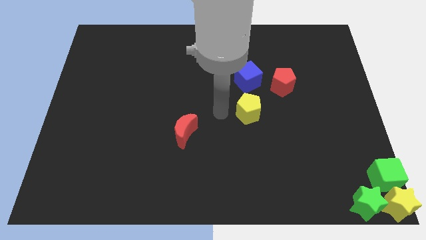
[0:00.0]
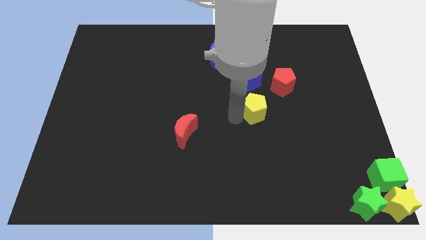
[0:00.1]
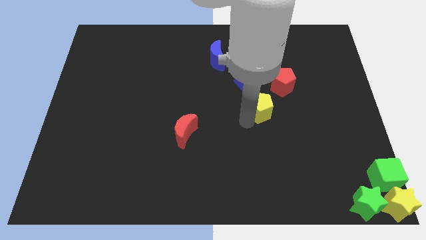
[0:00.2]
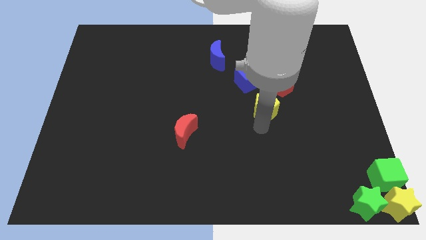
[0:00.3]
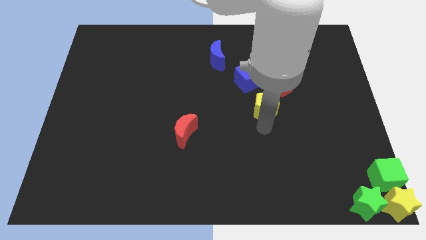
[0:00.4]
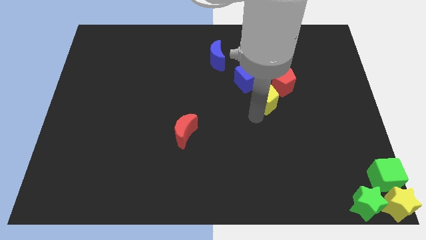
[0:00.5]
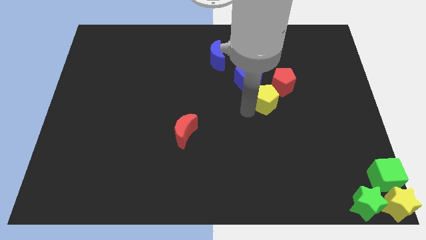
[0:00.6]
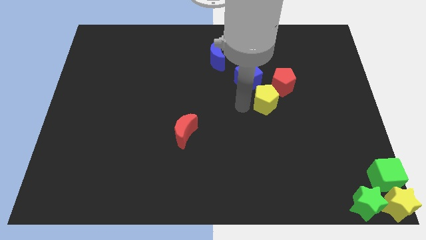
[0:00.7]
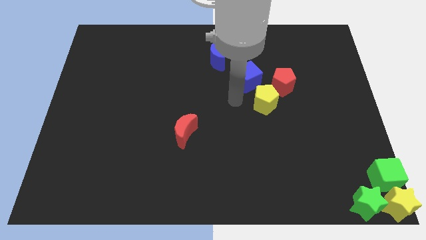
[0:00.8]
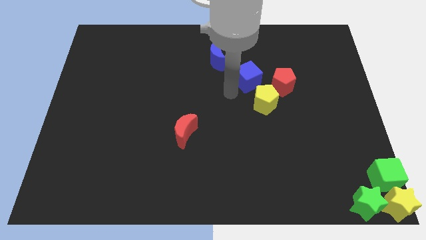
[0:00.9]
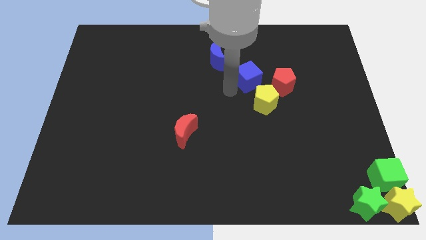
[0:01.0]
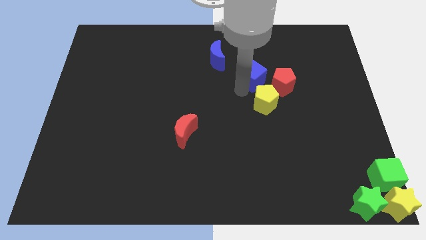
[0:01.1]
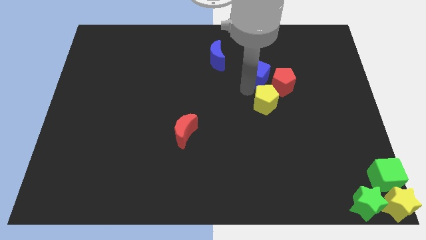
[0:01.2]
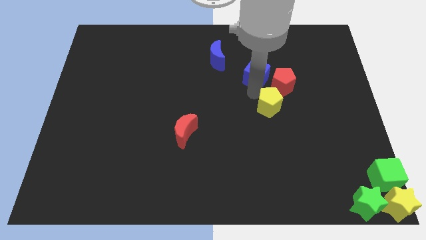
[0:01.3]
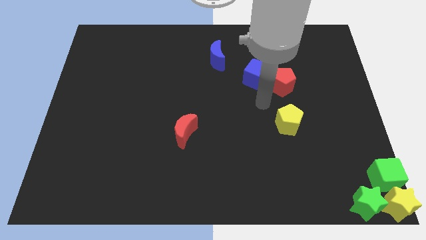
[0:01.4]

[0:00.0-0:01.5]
place the yellow pentagon below the red pentagon

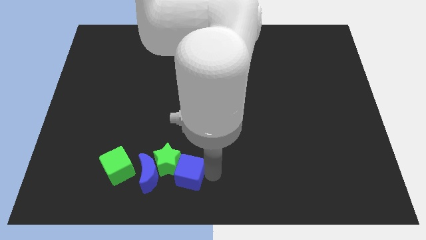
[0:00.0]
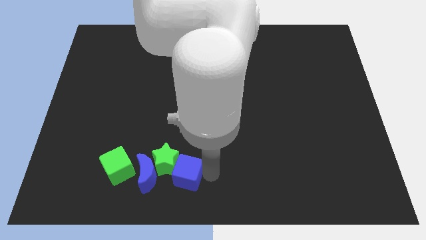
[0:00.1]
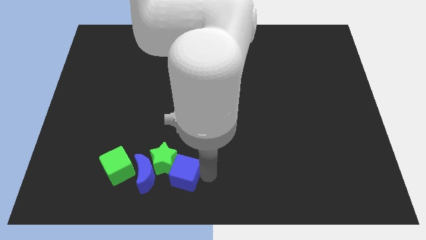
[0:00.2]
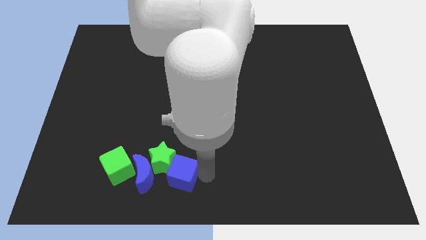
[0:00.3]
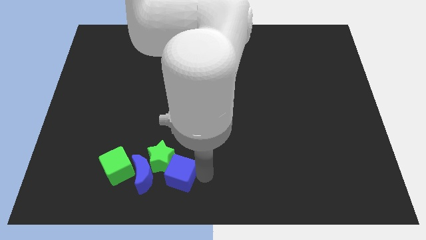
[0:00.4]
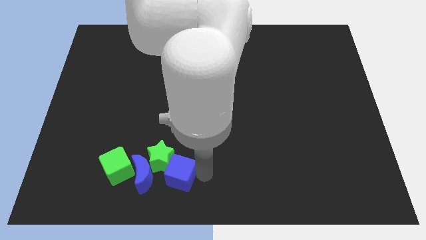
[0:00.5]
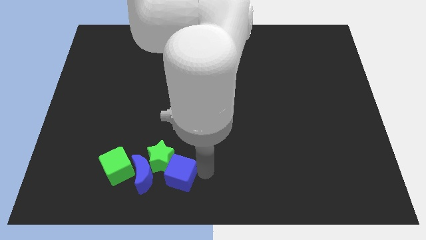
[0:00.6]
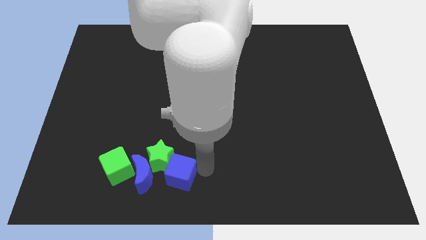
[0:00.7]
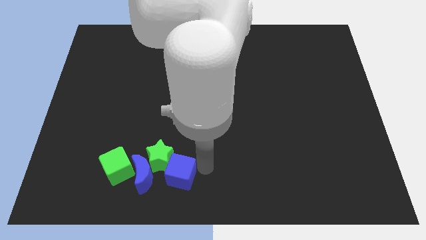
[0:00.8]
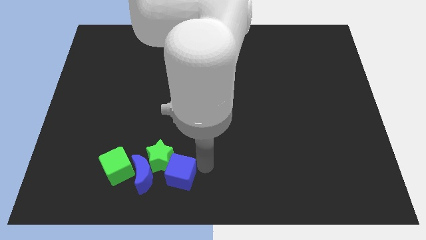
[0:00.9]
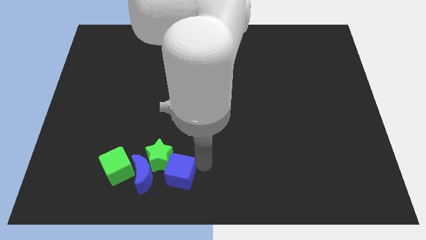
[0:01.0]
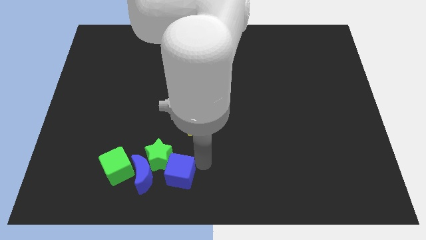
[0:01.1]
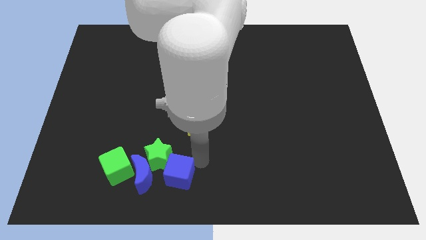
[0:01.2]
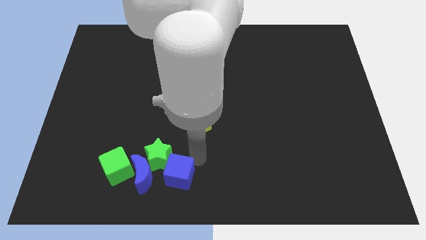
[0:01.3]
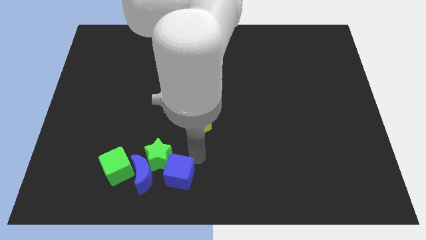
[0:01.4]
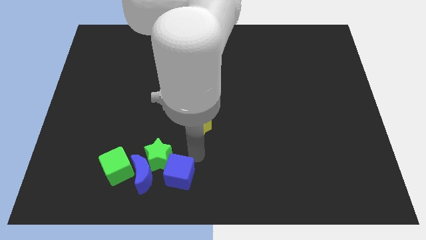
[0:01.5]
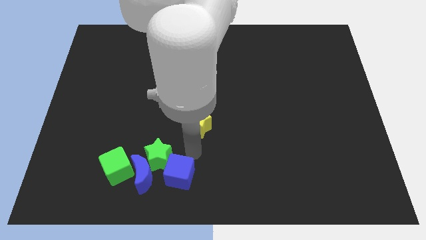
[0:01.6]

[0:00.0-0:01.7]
push the blue cube slightly to the left along with the green starblue crescent and green cube

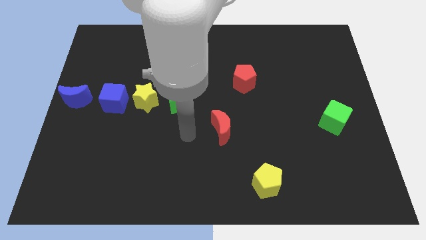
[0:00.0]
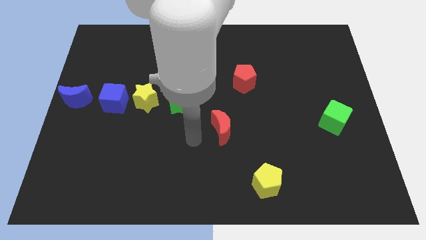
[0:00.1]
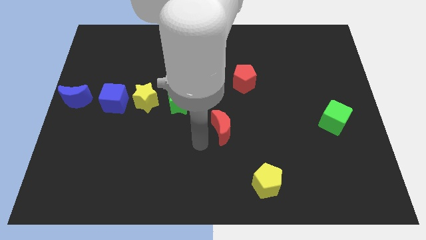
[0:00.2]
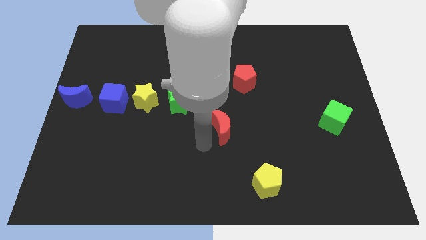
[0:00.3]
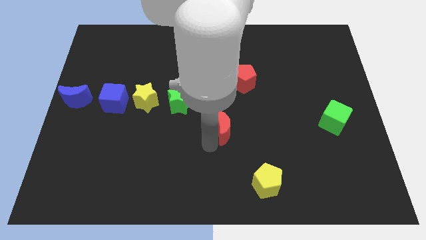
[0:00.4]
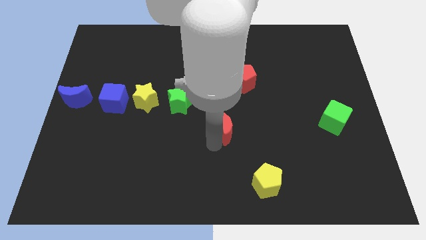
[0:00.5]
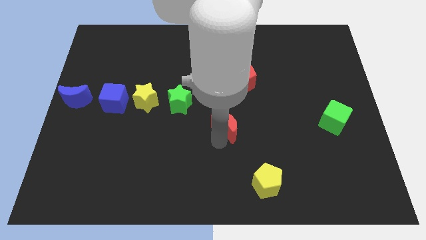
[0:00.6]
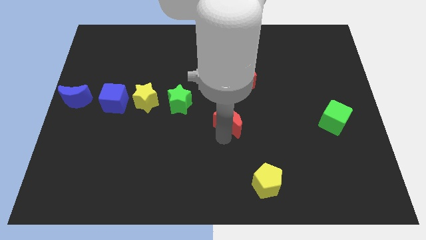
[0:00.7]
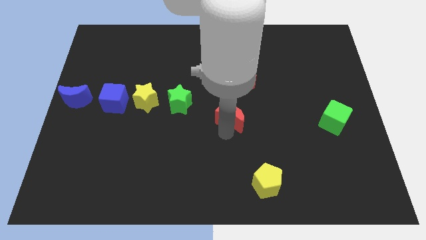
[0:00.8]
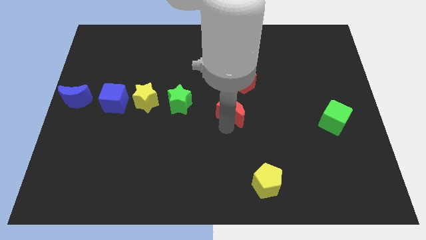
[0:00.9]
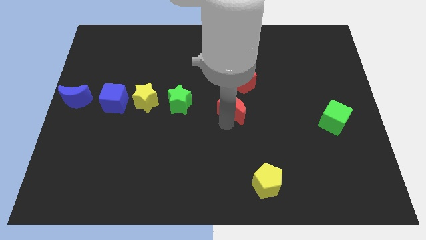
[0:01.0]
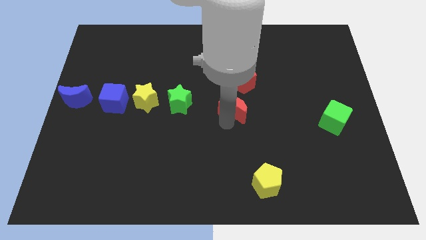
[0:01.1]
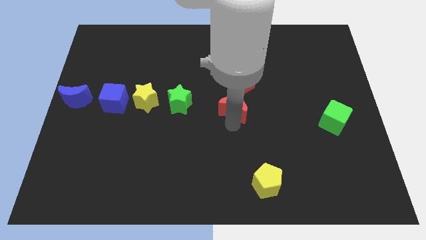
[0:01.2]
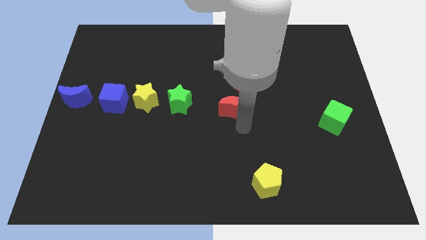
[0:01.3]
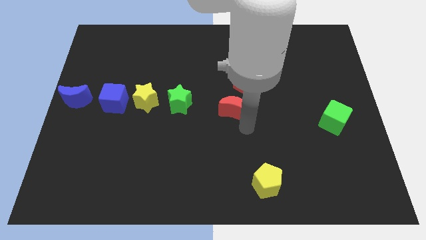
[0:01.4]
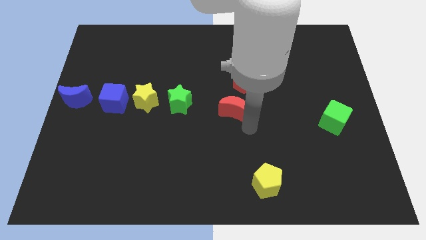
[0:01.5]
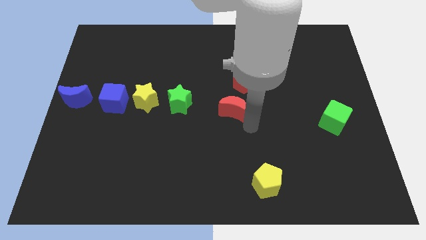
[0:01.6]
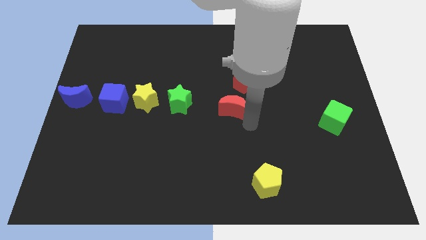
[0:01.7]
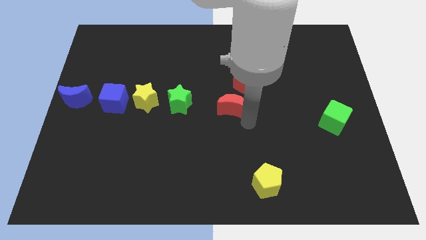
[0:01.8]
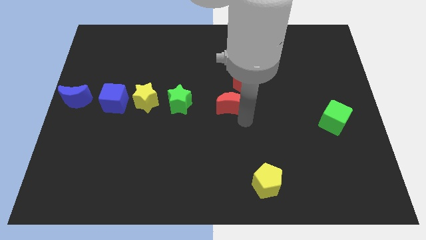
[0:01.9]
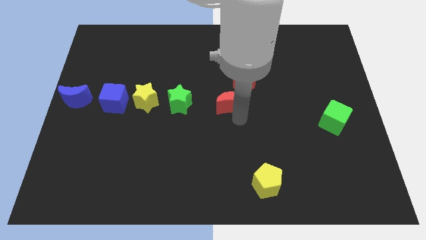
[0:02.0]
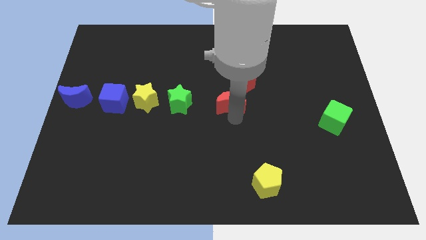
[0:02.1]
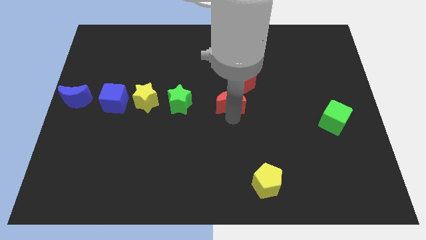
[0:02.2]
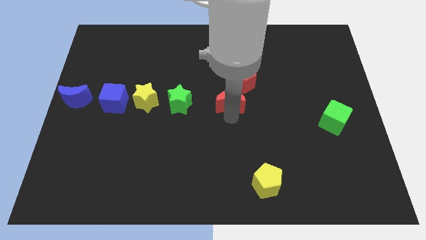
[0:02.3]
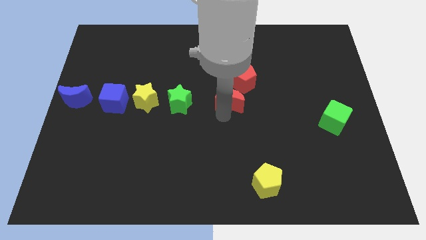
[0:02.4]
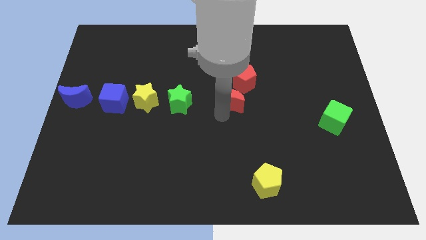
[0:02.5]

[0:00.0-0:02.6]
push the red crescent towards the red pentagon

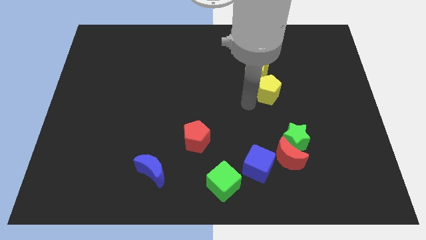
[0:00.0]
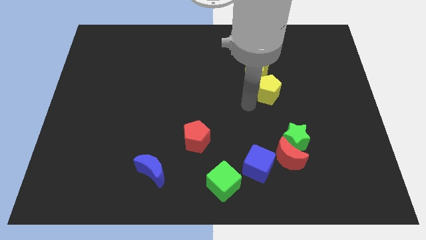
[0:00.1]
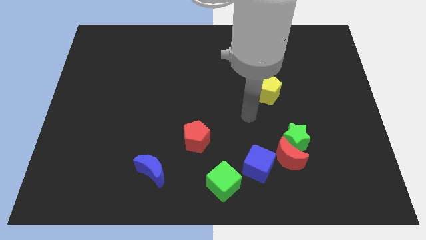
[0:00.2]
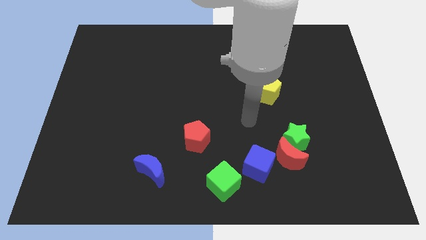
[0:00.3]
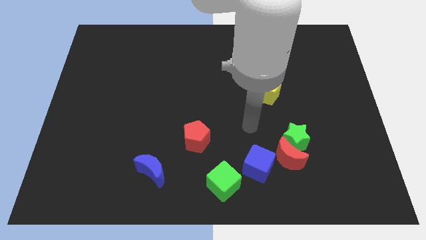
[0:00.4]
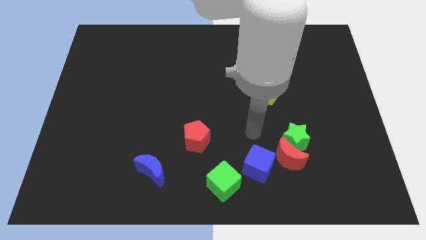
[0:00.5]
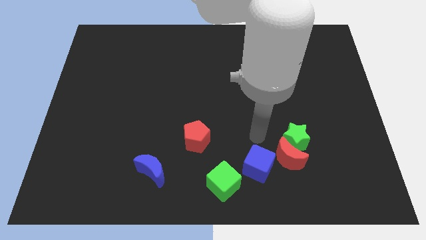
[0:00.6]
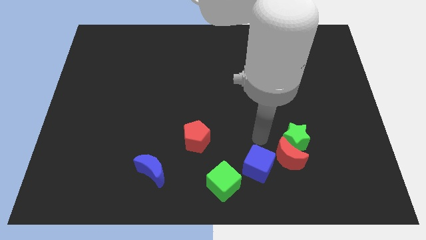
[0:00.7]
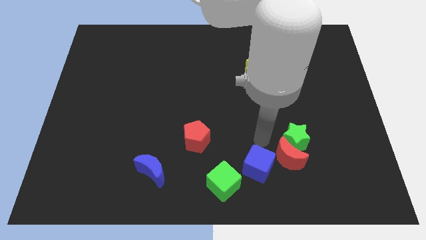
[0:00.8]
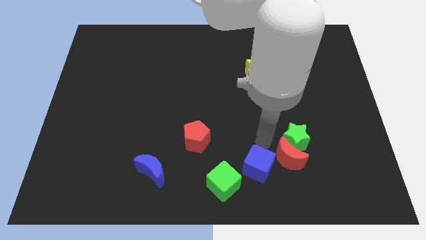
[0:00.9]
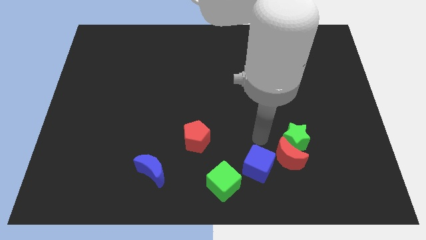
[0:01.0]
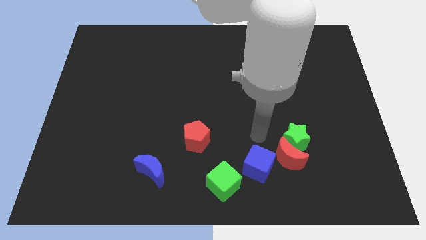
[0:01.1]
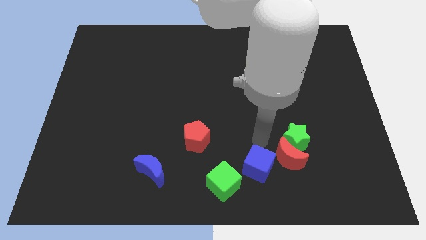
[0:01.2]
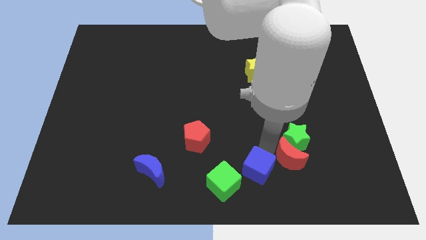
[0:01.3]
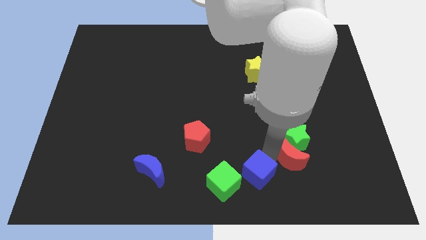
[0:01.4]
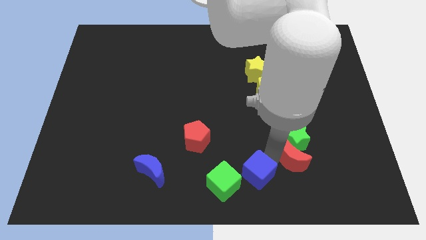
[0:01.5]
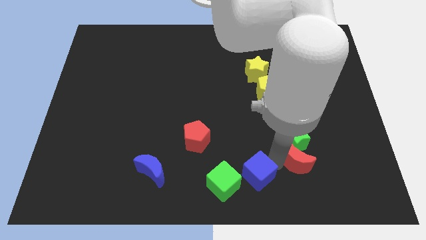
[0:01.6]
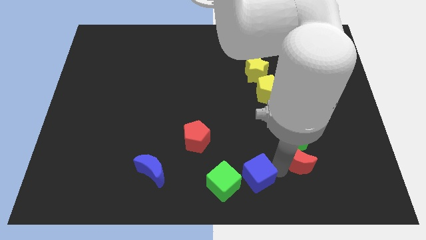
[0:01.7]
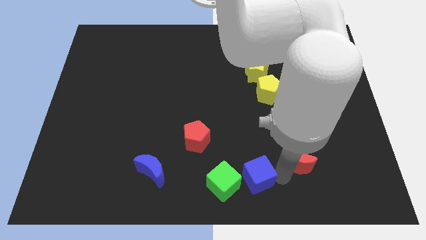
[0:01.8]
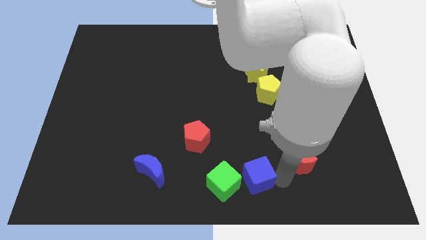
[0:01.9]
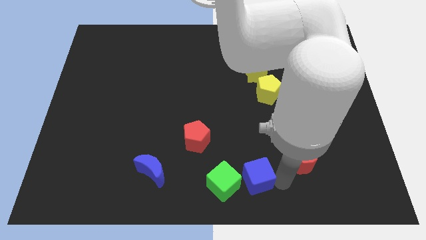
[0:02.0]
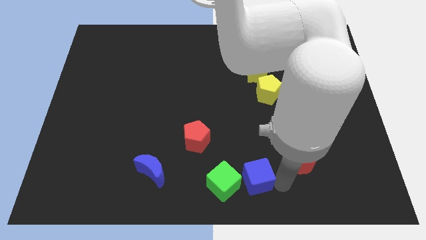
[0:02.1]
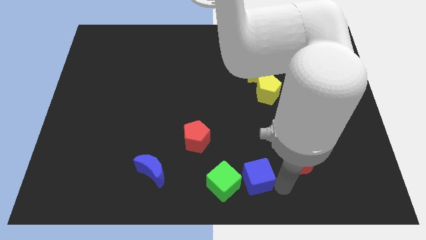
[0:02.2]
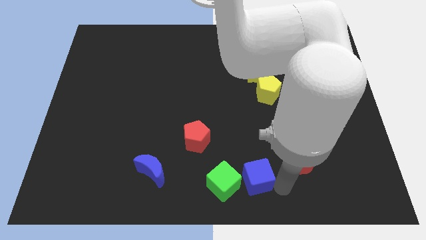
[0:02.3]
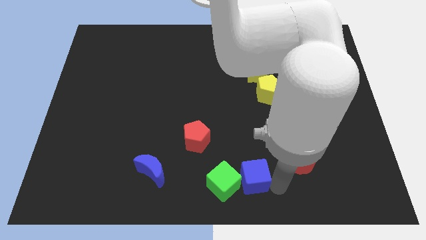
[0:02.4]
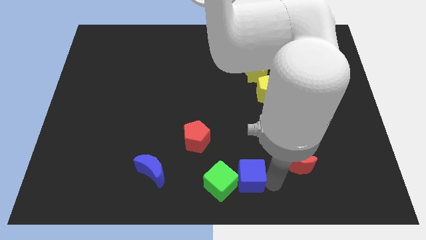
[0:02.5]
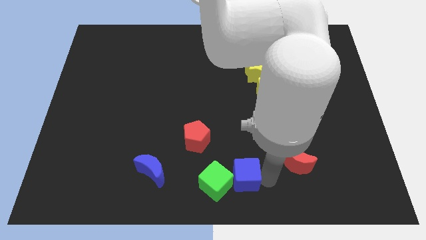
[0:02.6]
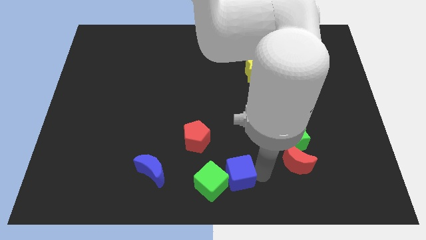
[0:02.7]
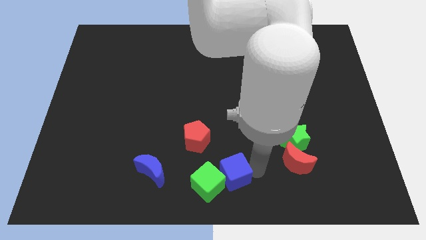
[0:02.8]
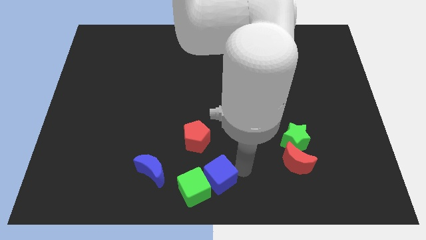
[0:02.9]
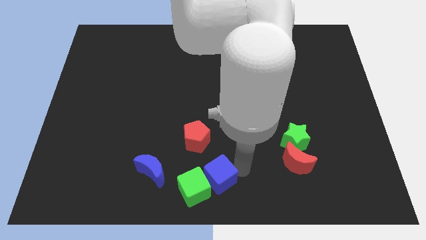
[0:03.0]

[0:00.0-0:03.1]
move the blue cube along with the green cube to the bottom of the red pentagon
